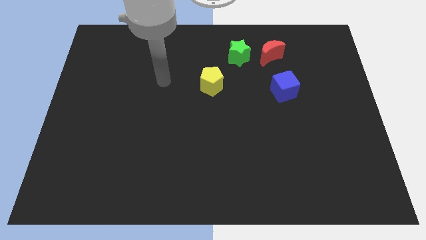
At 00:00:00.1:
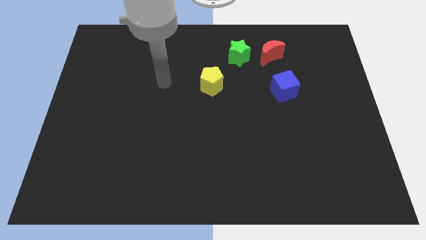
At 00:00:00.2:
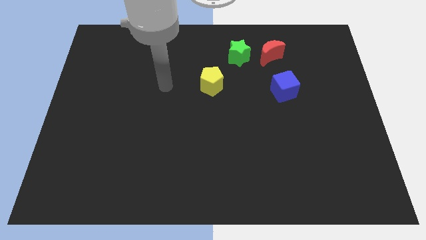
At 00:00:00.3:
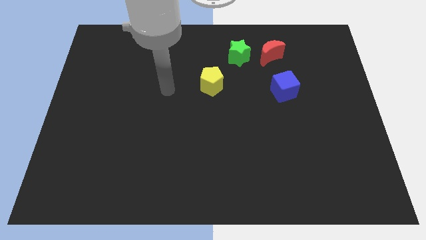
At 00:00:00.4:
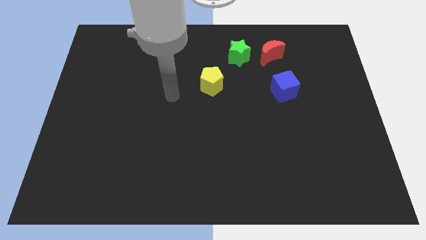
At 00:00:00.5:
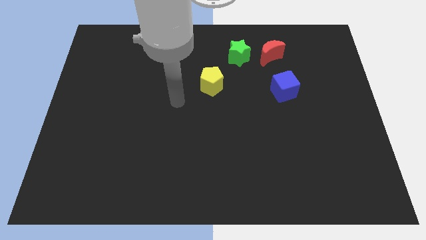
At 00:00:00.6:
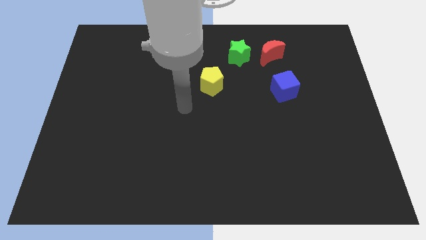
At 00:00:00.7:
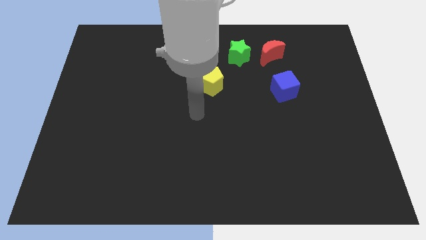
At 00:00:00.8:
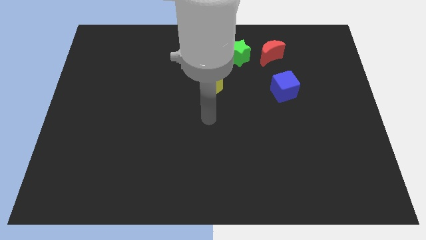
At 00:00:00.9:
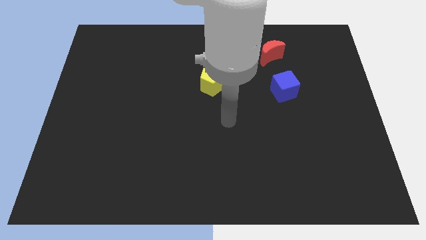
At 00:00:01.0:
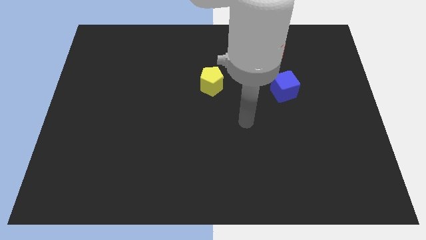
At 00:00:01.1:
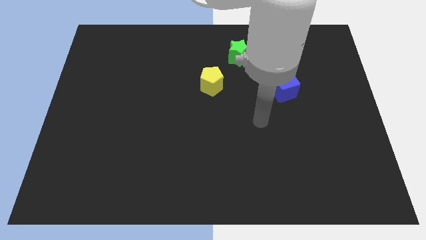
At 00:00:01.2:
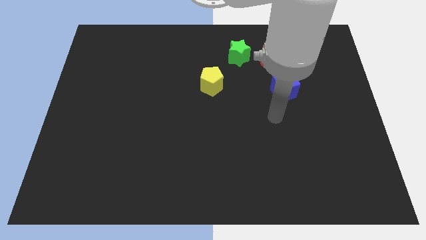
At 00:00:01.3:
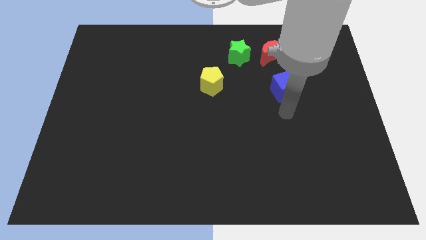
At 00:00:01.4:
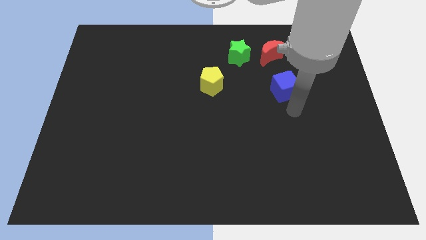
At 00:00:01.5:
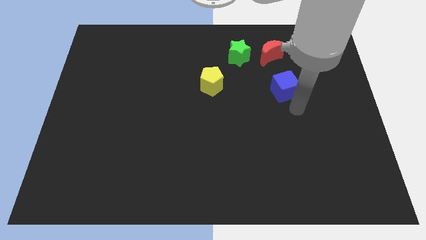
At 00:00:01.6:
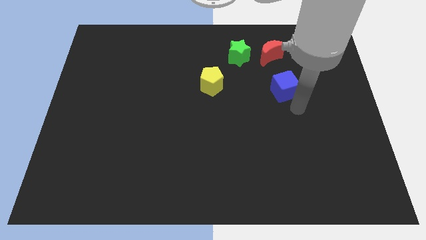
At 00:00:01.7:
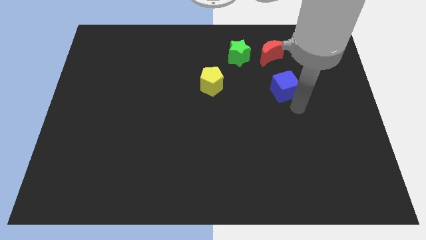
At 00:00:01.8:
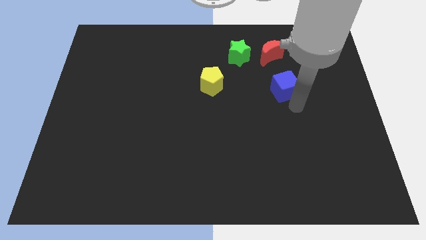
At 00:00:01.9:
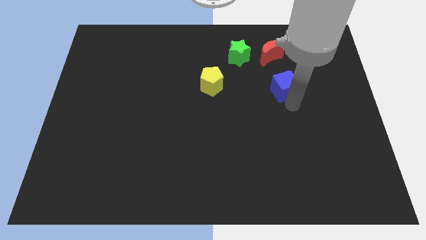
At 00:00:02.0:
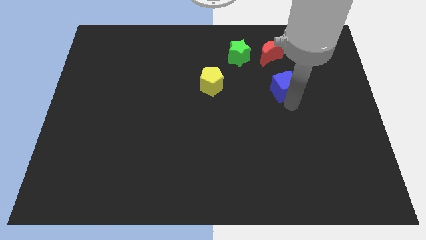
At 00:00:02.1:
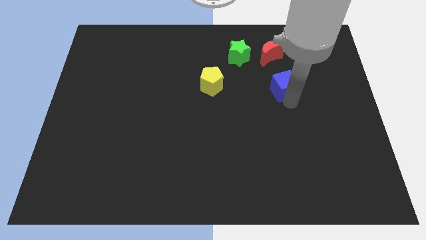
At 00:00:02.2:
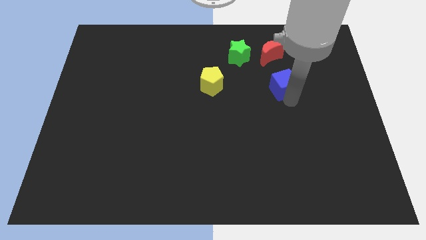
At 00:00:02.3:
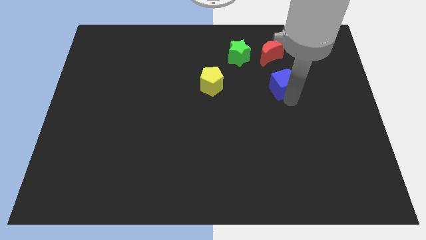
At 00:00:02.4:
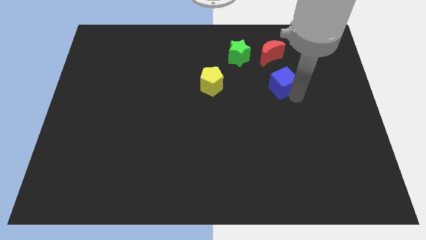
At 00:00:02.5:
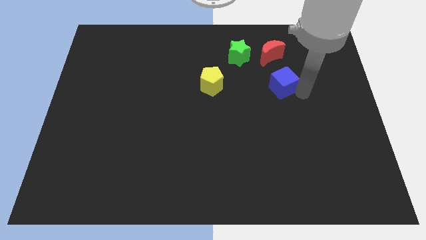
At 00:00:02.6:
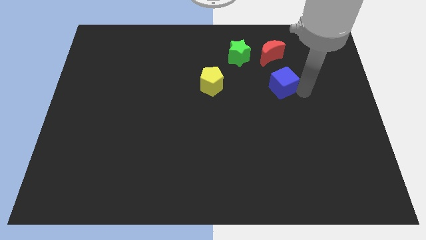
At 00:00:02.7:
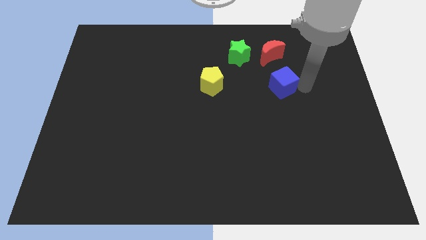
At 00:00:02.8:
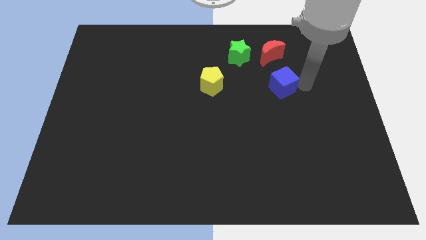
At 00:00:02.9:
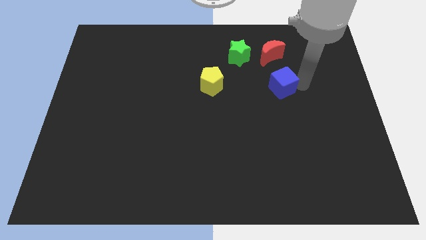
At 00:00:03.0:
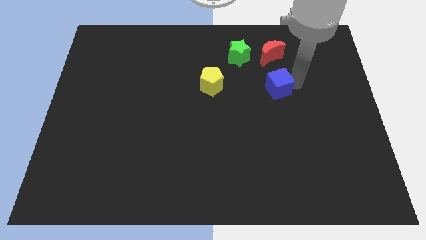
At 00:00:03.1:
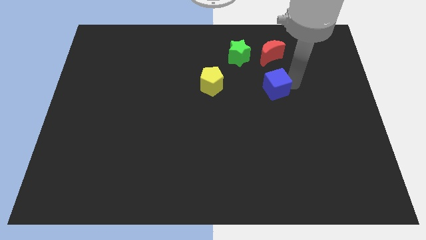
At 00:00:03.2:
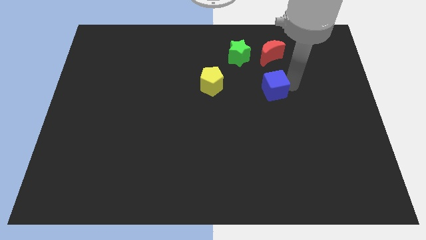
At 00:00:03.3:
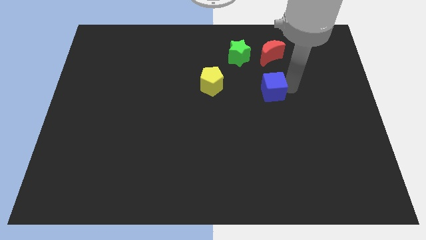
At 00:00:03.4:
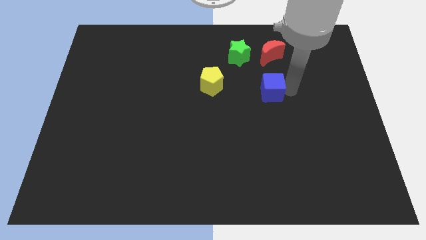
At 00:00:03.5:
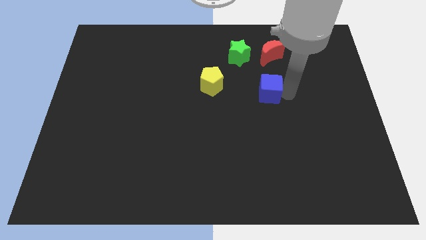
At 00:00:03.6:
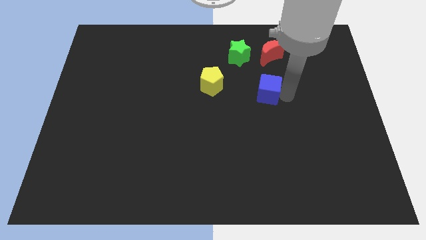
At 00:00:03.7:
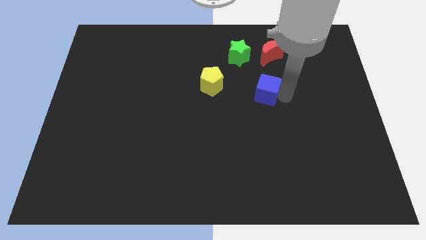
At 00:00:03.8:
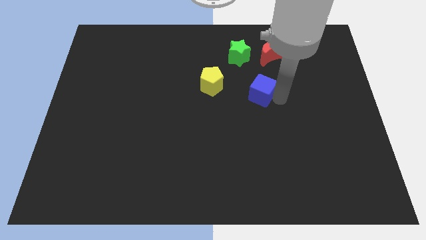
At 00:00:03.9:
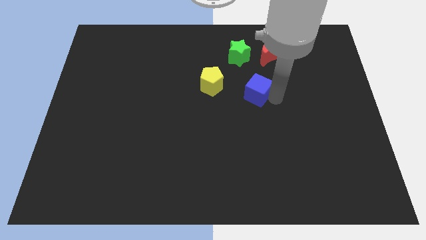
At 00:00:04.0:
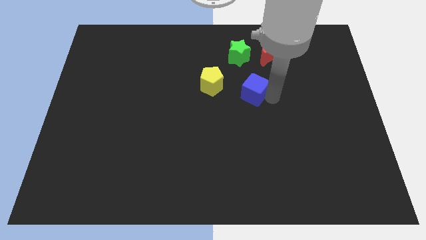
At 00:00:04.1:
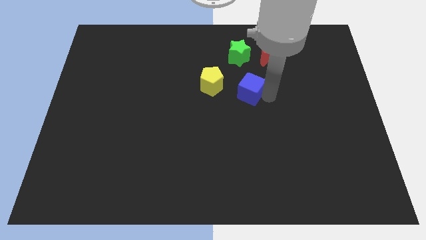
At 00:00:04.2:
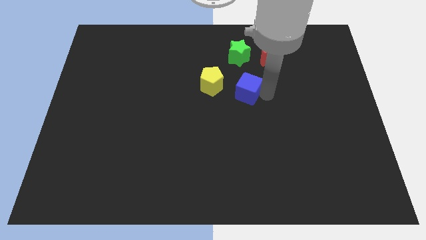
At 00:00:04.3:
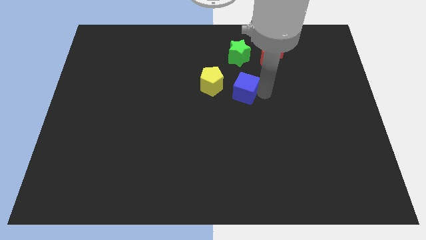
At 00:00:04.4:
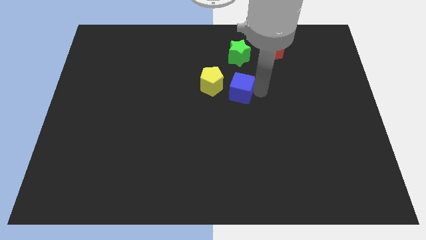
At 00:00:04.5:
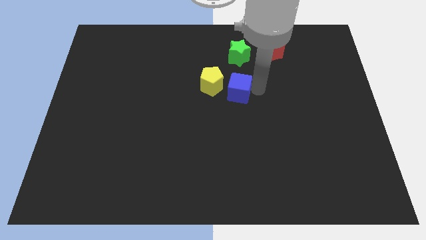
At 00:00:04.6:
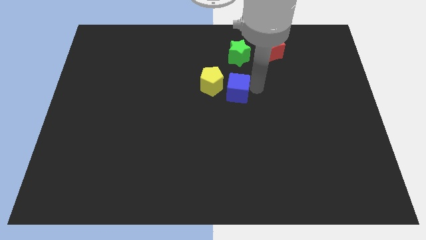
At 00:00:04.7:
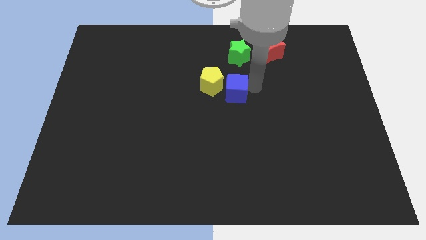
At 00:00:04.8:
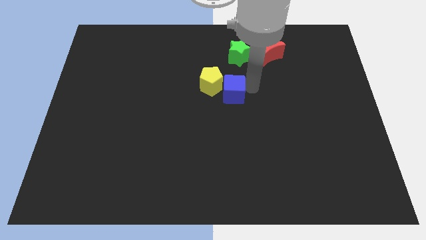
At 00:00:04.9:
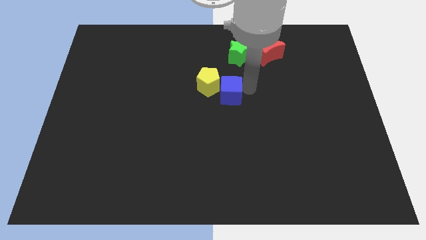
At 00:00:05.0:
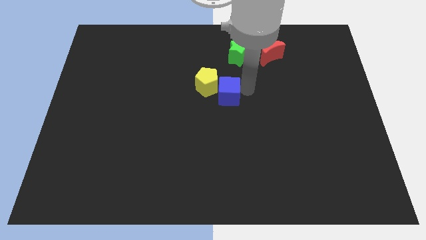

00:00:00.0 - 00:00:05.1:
push the blue block close to the pentagon

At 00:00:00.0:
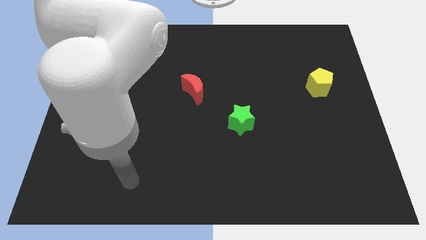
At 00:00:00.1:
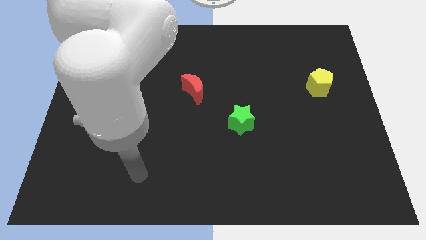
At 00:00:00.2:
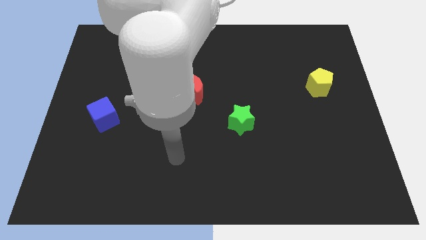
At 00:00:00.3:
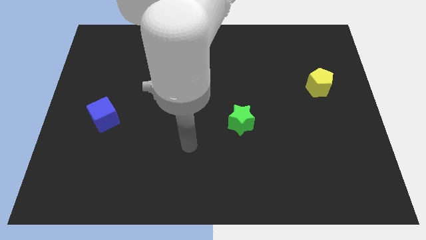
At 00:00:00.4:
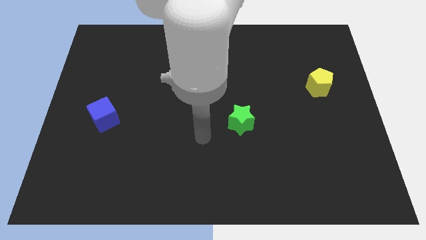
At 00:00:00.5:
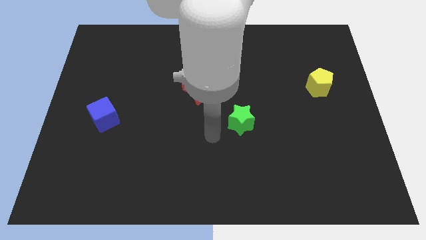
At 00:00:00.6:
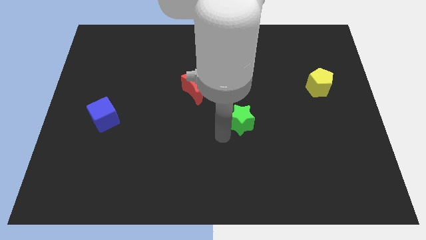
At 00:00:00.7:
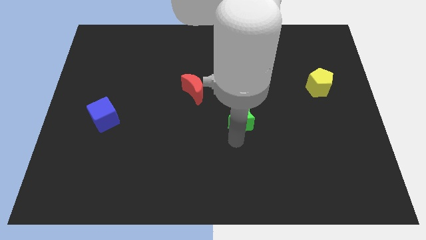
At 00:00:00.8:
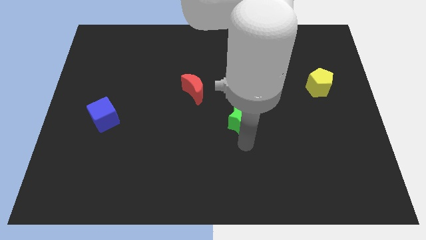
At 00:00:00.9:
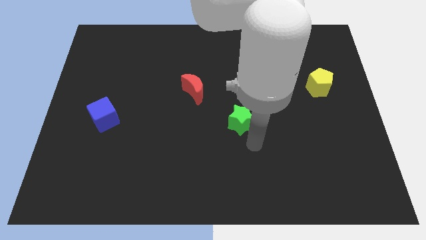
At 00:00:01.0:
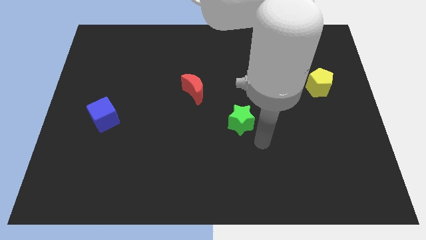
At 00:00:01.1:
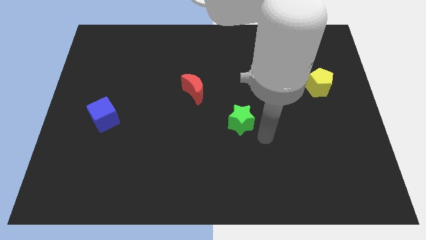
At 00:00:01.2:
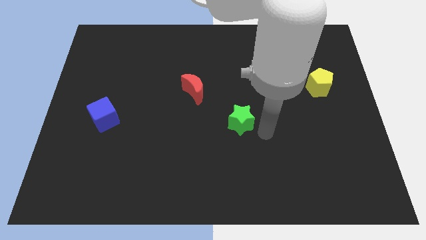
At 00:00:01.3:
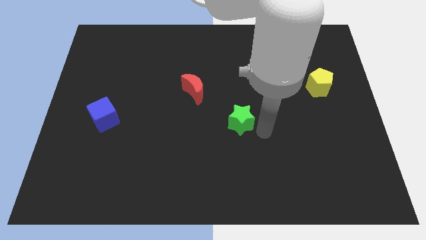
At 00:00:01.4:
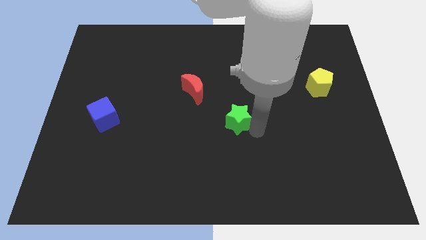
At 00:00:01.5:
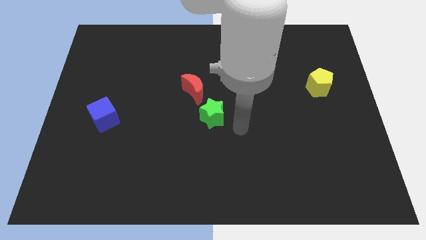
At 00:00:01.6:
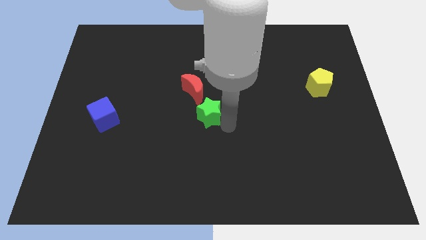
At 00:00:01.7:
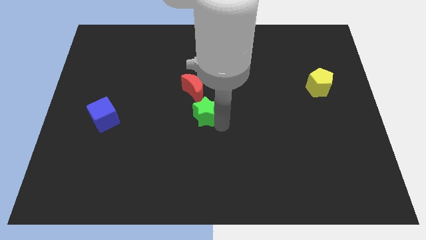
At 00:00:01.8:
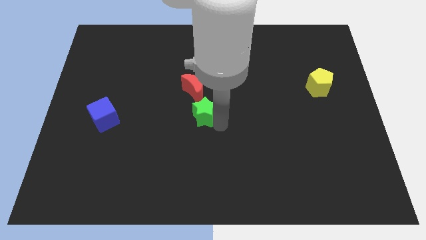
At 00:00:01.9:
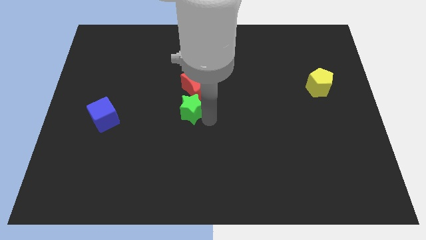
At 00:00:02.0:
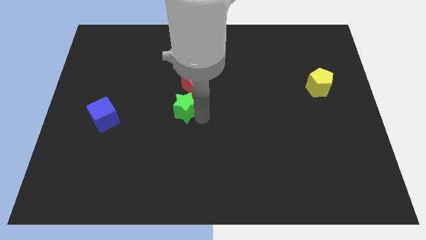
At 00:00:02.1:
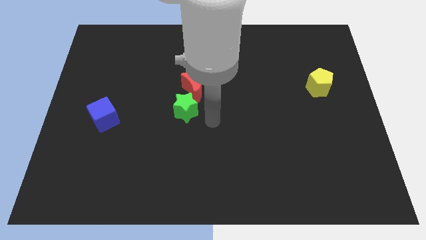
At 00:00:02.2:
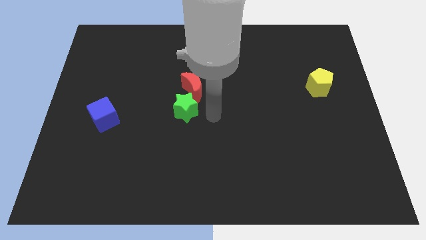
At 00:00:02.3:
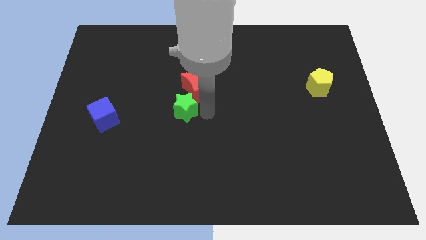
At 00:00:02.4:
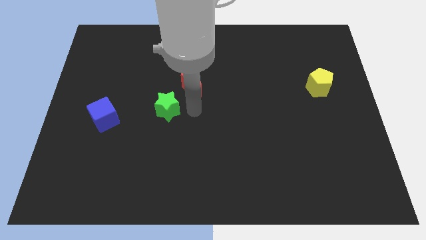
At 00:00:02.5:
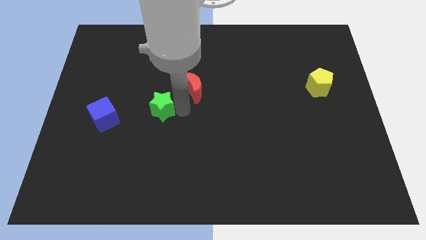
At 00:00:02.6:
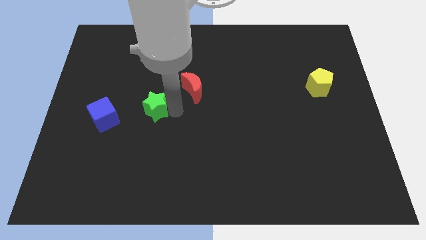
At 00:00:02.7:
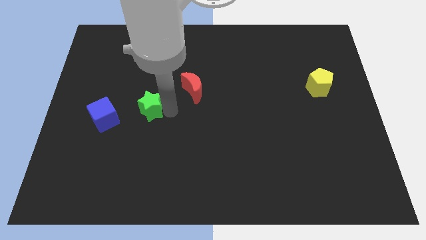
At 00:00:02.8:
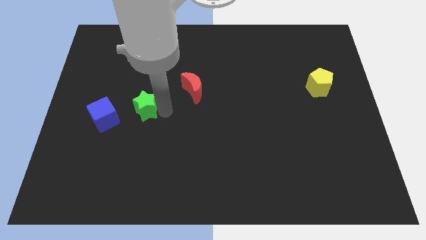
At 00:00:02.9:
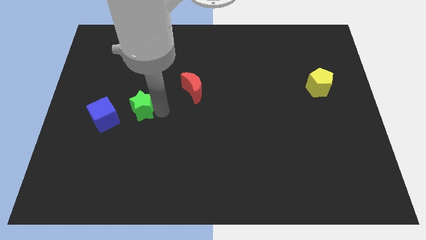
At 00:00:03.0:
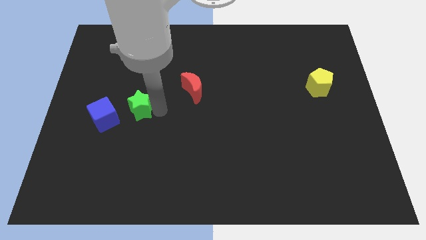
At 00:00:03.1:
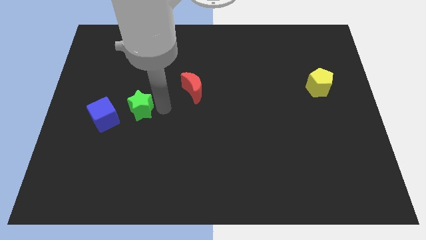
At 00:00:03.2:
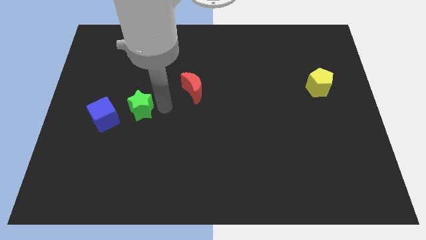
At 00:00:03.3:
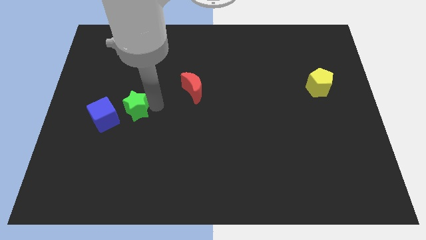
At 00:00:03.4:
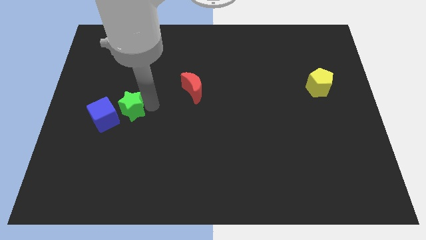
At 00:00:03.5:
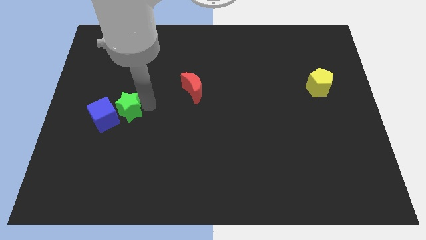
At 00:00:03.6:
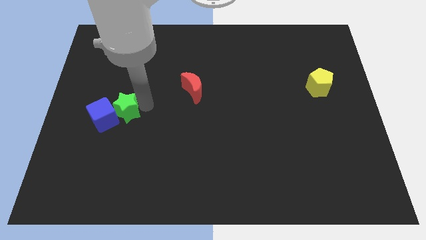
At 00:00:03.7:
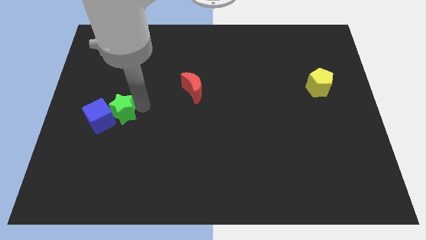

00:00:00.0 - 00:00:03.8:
push the green block to the cube
